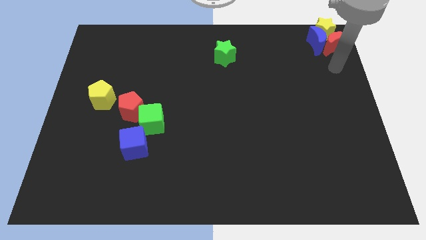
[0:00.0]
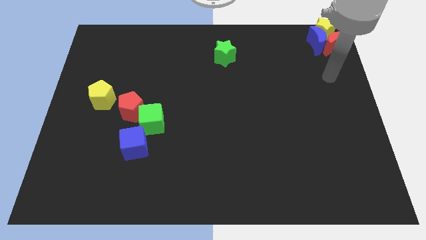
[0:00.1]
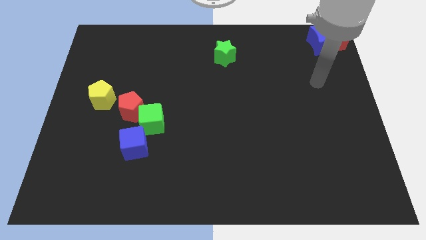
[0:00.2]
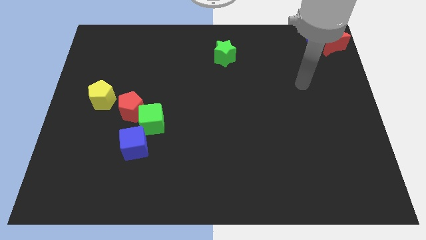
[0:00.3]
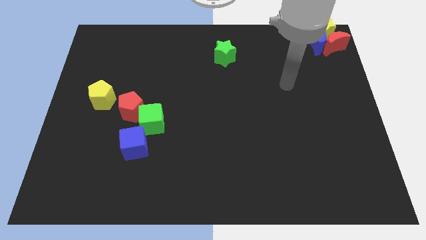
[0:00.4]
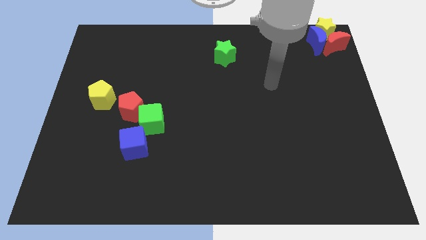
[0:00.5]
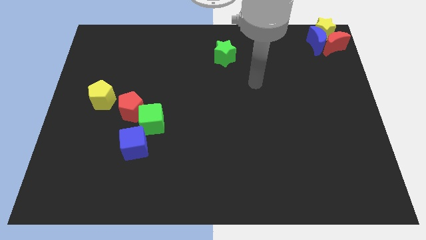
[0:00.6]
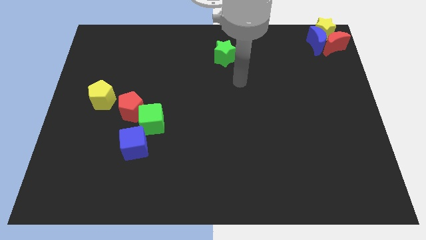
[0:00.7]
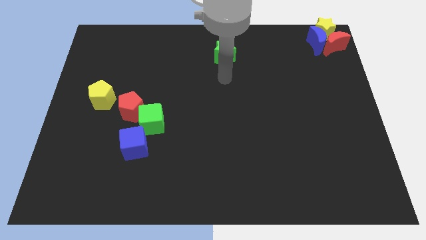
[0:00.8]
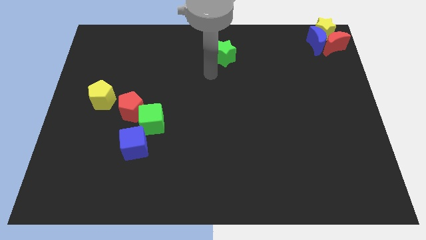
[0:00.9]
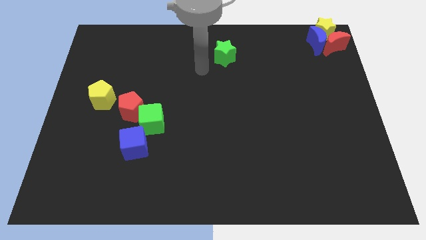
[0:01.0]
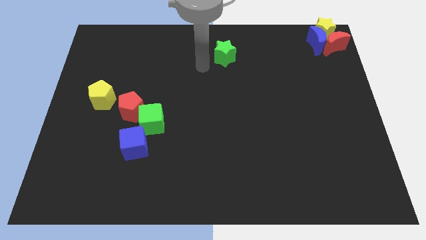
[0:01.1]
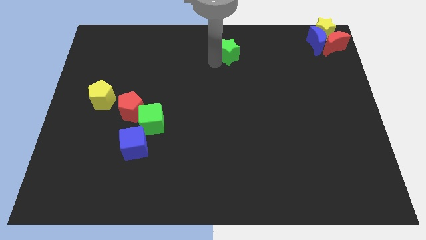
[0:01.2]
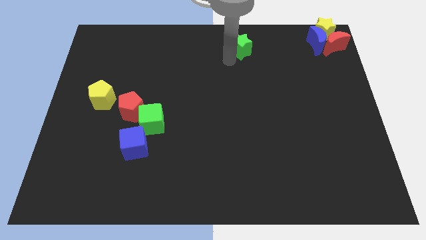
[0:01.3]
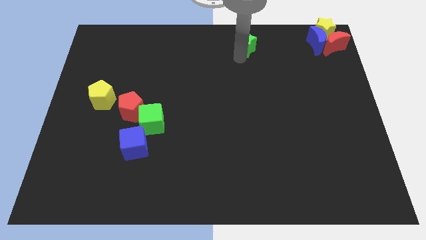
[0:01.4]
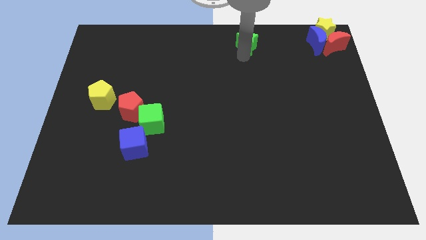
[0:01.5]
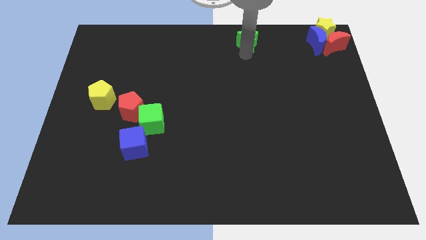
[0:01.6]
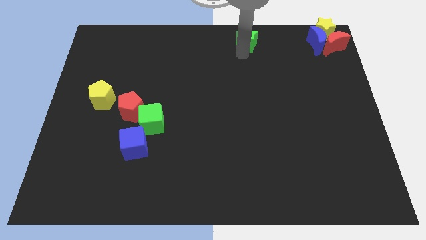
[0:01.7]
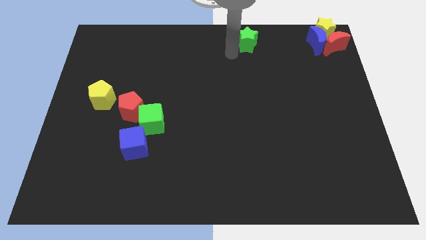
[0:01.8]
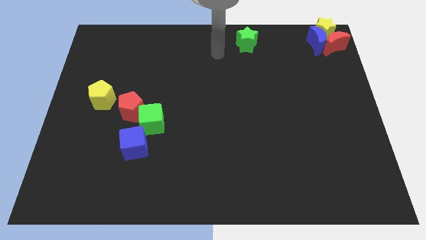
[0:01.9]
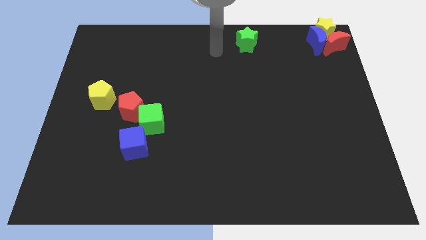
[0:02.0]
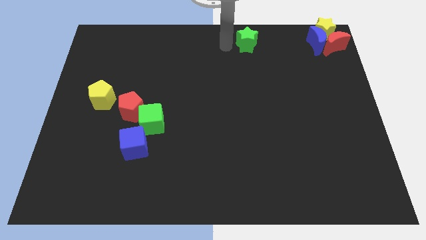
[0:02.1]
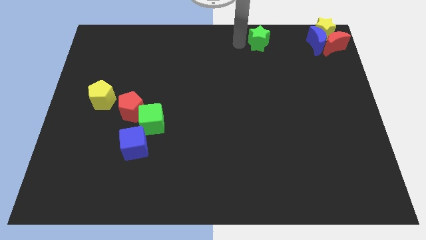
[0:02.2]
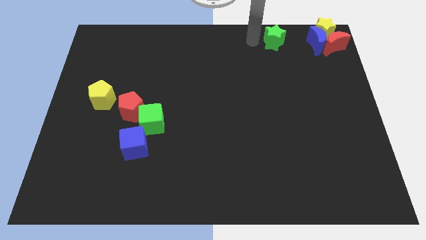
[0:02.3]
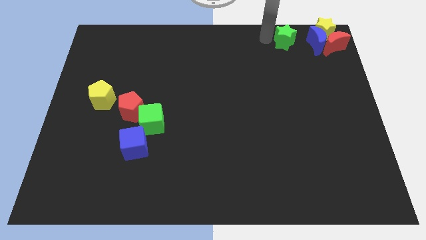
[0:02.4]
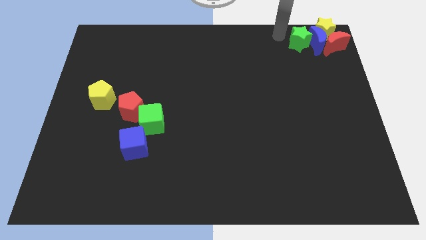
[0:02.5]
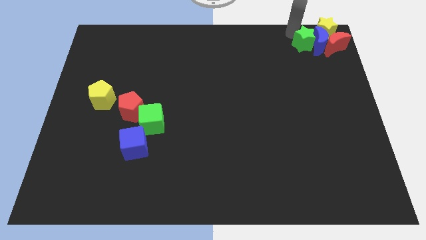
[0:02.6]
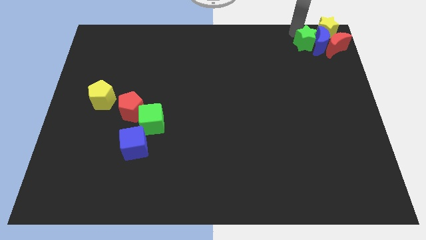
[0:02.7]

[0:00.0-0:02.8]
push the green star into the left side of the blue crescent

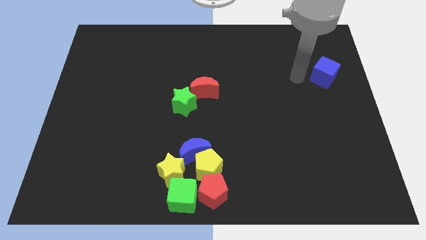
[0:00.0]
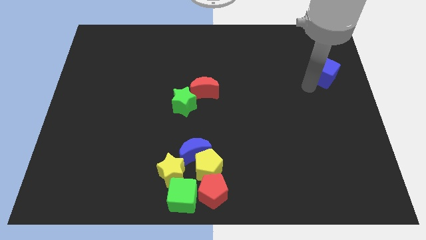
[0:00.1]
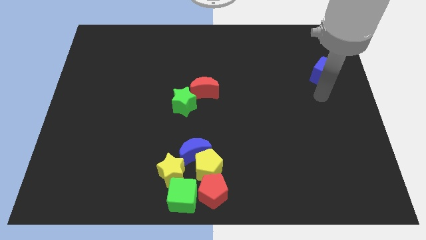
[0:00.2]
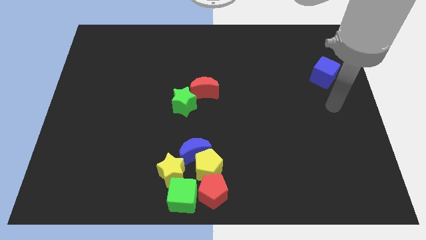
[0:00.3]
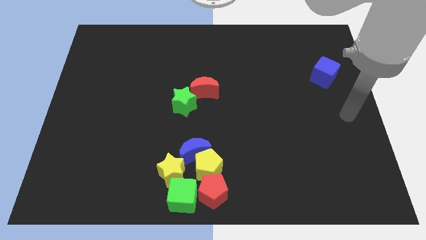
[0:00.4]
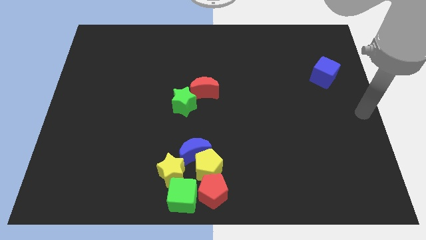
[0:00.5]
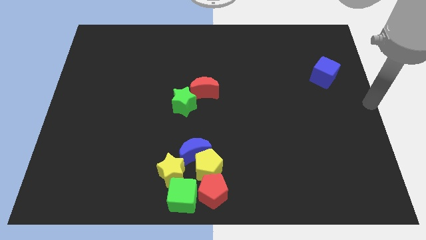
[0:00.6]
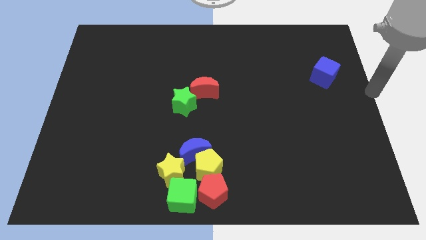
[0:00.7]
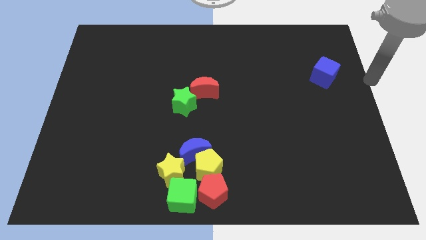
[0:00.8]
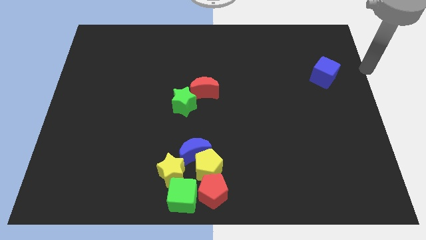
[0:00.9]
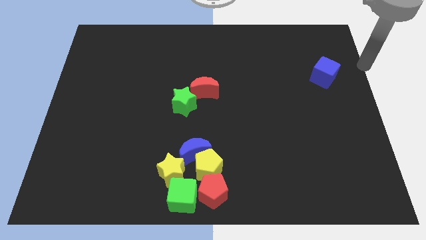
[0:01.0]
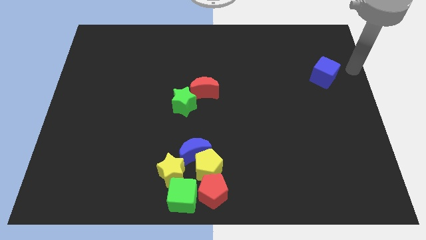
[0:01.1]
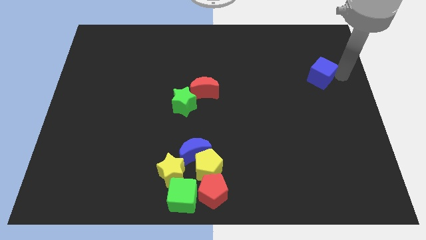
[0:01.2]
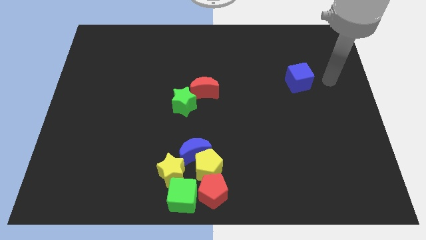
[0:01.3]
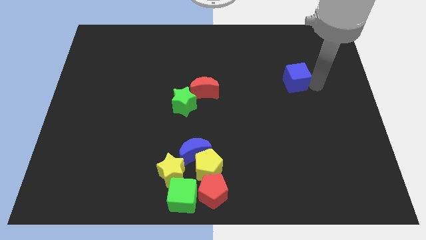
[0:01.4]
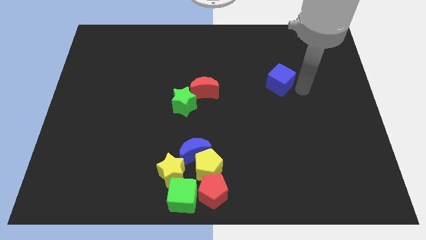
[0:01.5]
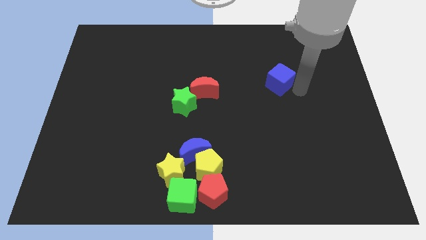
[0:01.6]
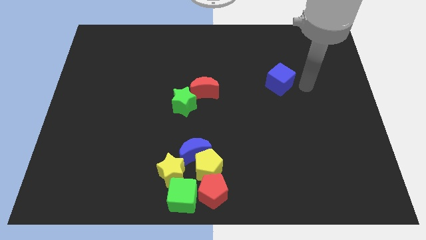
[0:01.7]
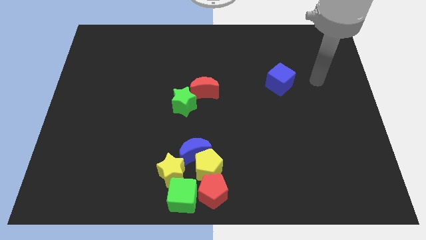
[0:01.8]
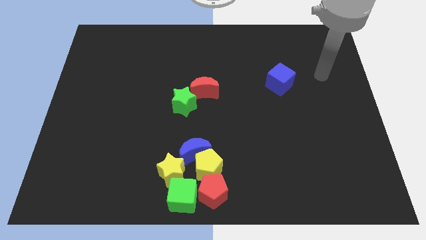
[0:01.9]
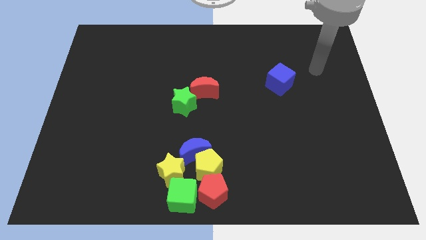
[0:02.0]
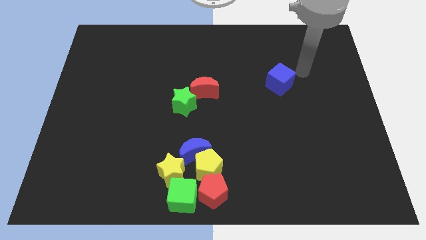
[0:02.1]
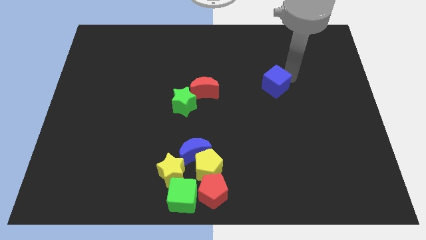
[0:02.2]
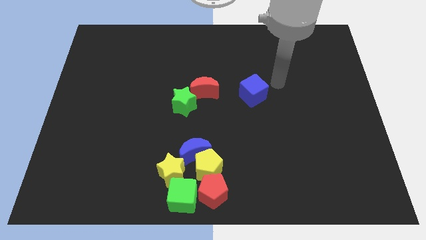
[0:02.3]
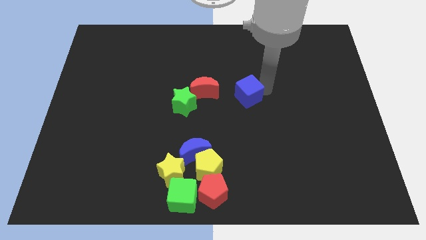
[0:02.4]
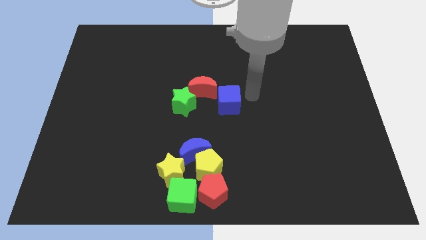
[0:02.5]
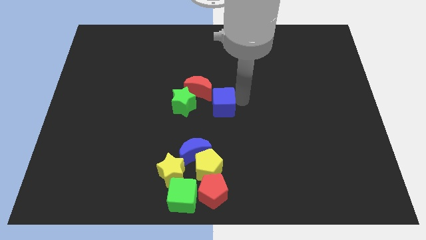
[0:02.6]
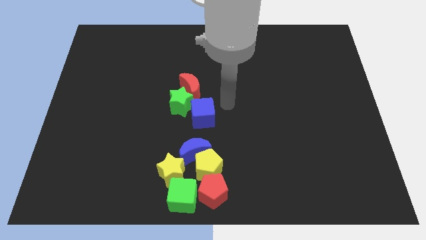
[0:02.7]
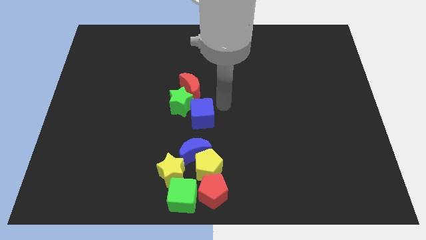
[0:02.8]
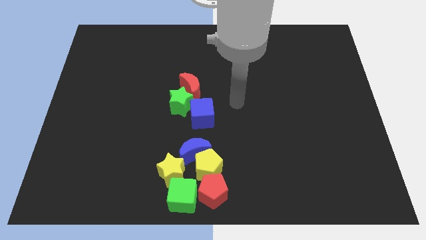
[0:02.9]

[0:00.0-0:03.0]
move the blue cube into the green star

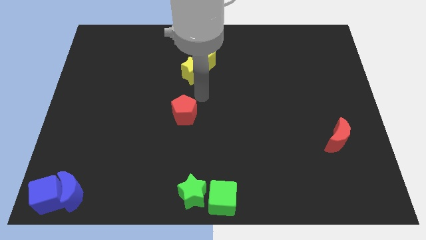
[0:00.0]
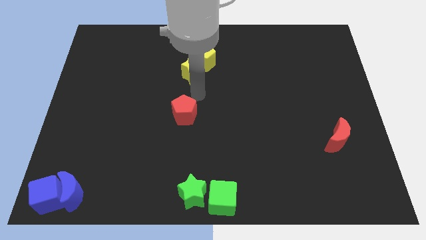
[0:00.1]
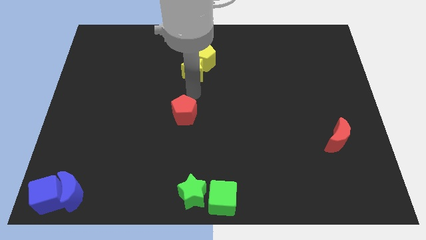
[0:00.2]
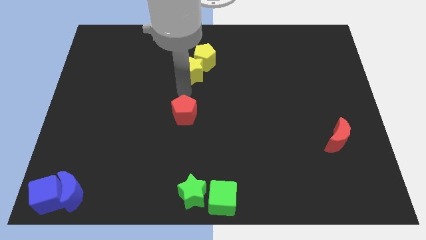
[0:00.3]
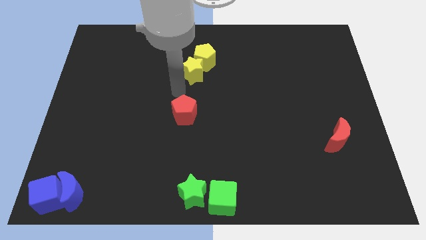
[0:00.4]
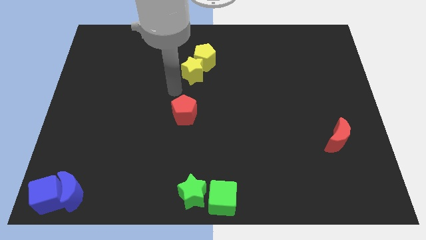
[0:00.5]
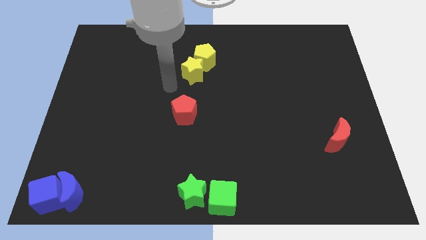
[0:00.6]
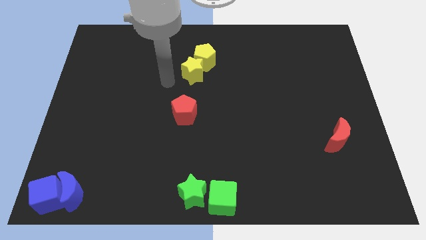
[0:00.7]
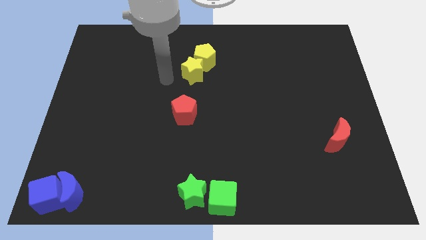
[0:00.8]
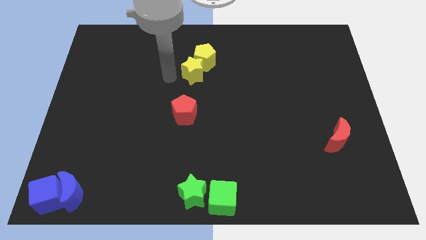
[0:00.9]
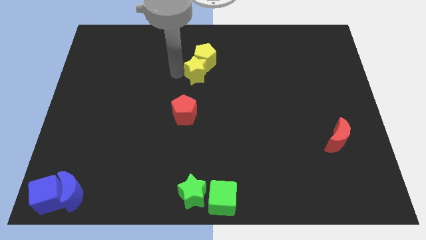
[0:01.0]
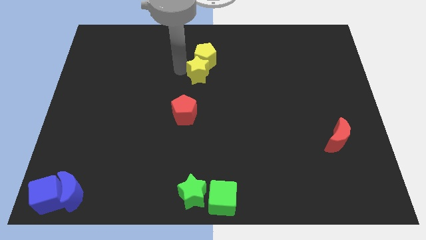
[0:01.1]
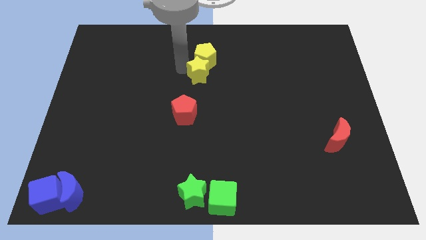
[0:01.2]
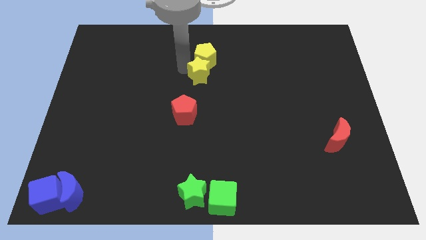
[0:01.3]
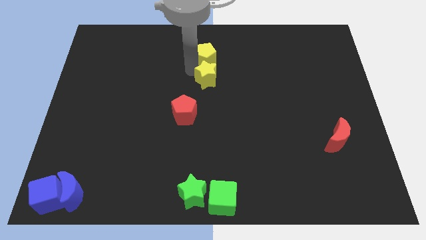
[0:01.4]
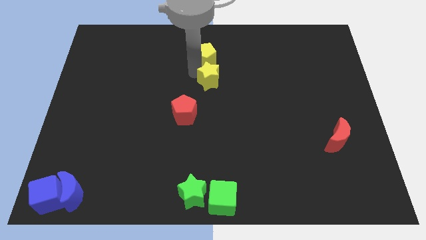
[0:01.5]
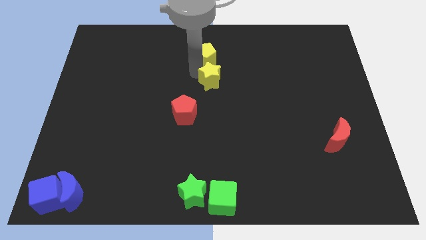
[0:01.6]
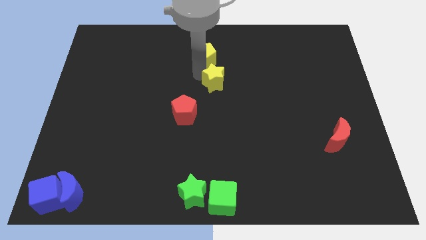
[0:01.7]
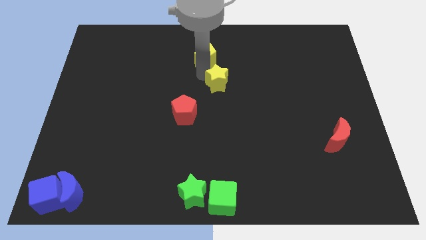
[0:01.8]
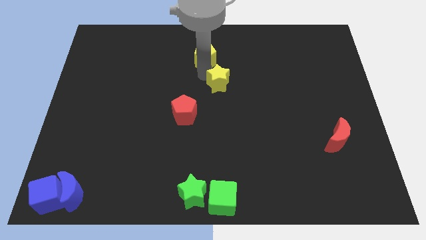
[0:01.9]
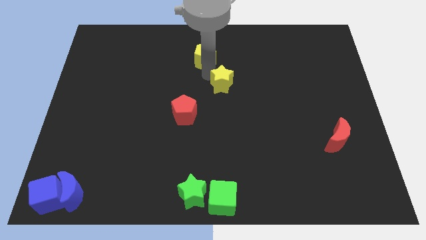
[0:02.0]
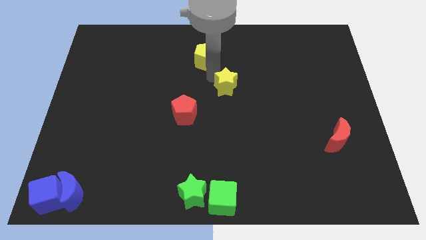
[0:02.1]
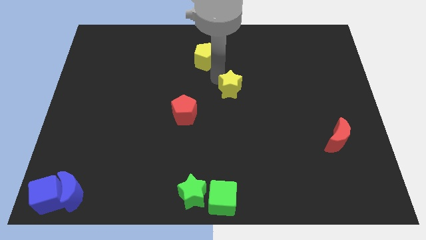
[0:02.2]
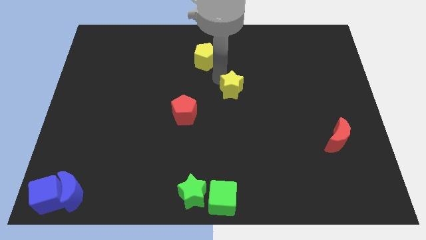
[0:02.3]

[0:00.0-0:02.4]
push yellow star above green cube

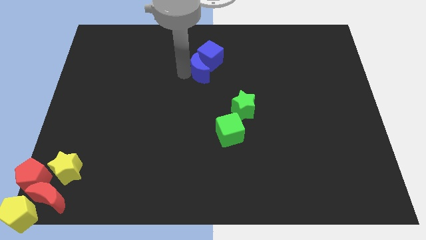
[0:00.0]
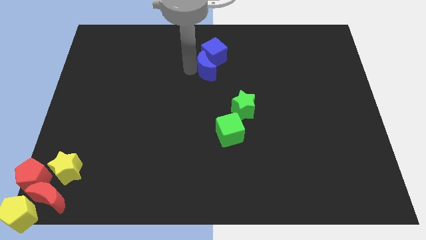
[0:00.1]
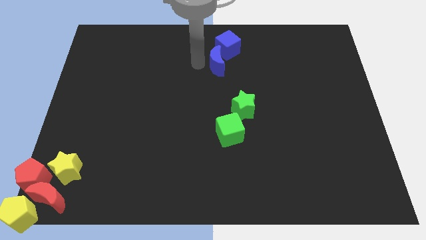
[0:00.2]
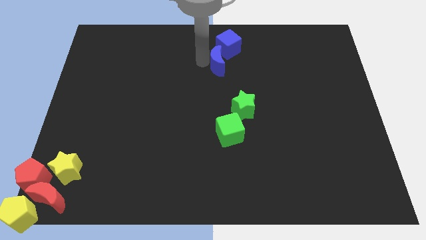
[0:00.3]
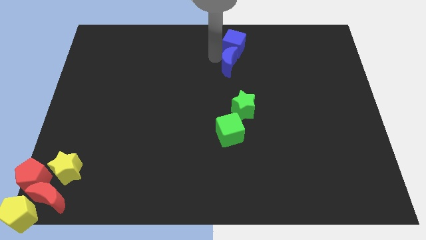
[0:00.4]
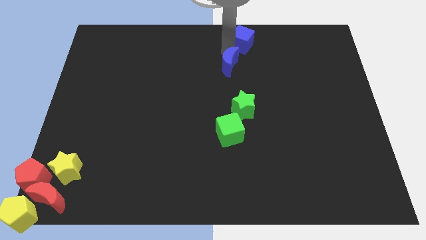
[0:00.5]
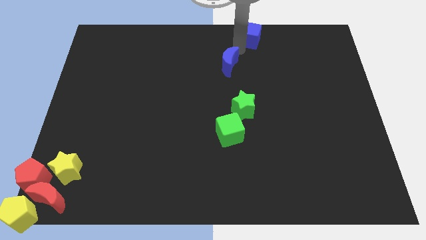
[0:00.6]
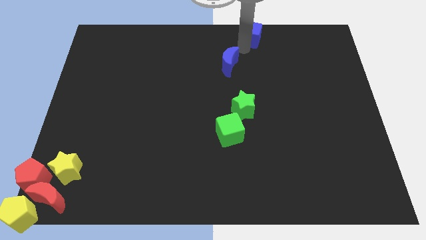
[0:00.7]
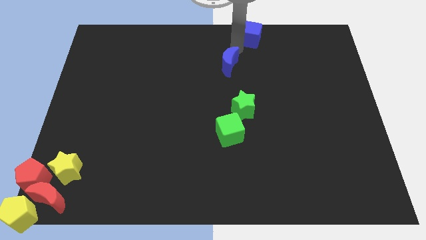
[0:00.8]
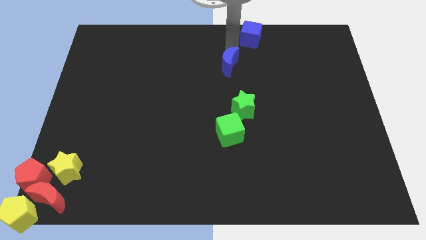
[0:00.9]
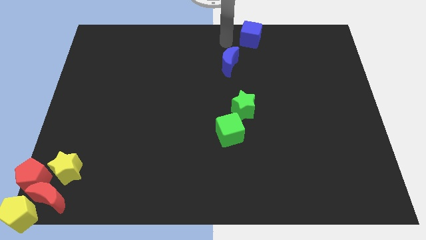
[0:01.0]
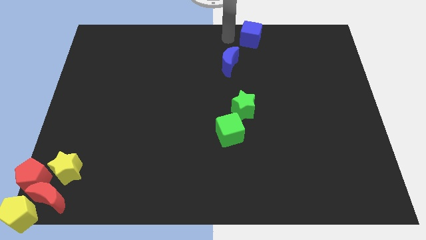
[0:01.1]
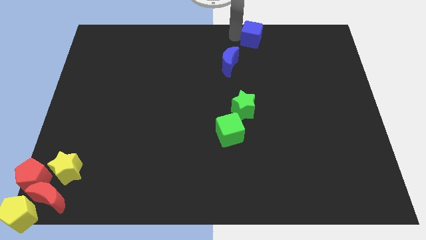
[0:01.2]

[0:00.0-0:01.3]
separate blue moon and the blue cube
